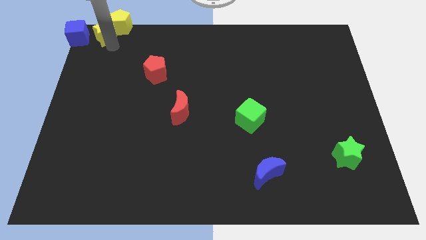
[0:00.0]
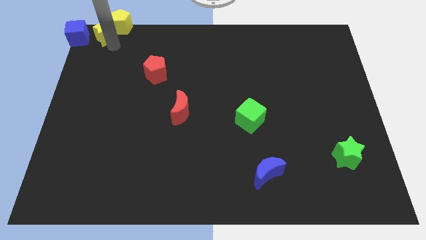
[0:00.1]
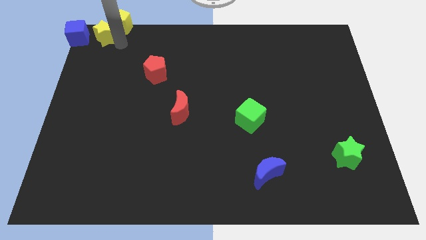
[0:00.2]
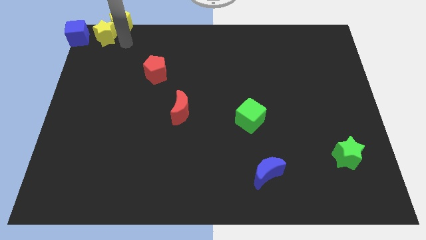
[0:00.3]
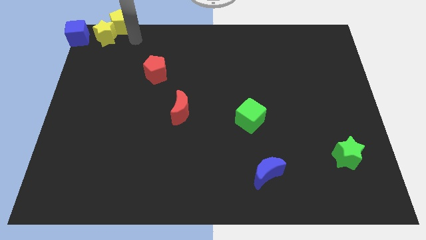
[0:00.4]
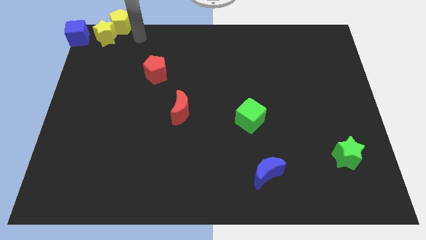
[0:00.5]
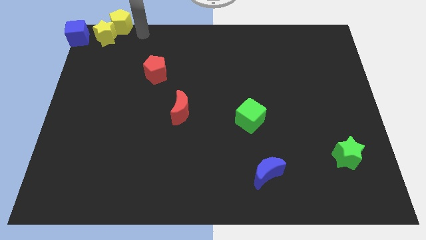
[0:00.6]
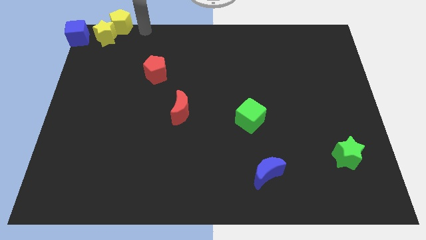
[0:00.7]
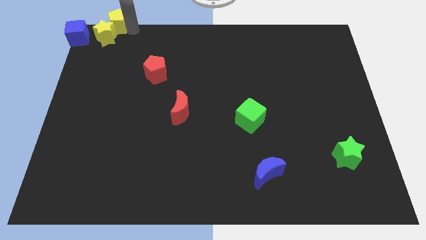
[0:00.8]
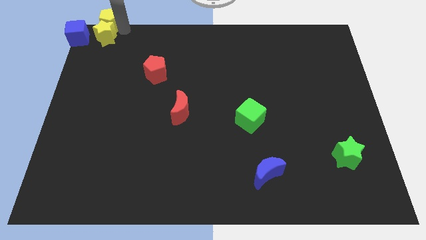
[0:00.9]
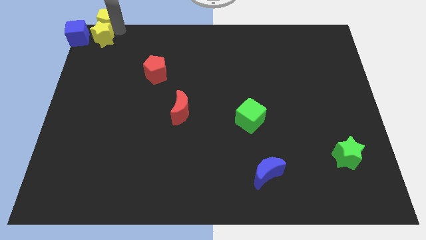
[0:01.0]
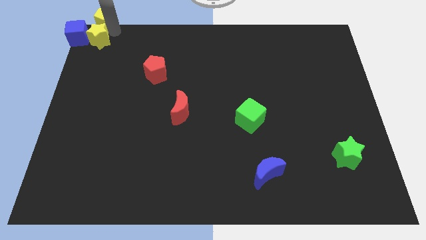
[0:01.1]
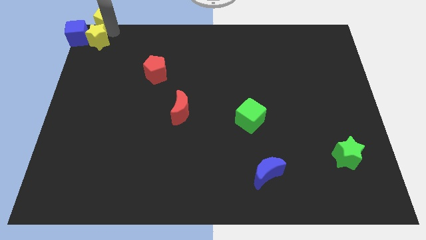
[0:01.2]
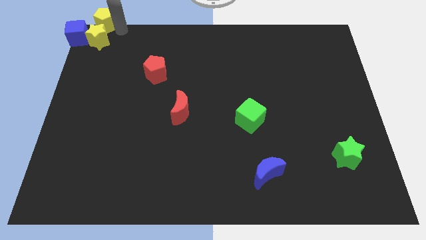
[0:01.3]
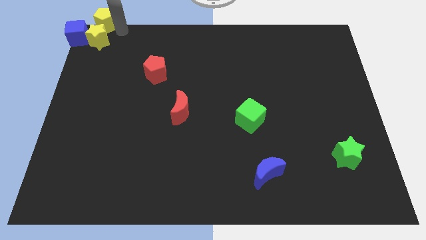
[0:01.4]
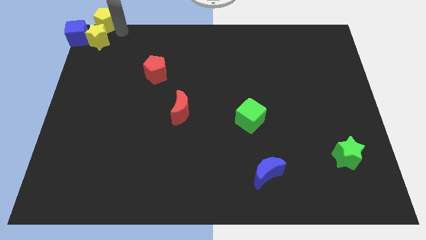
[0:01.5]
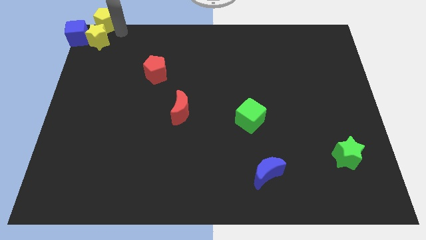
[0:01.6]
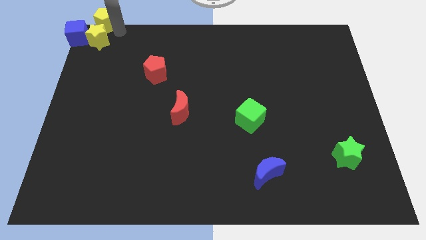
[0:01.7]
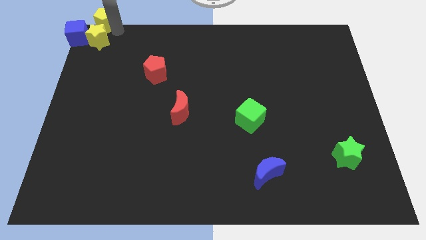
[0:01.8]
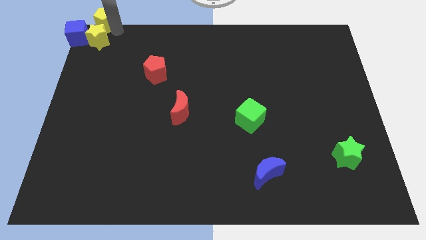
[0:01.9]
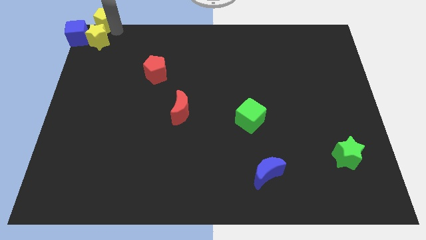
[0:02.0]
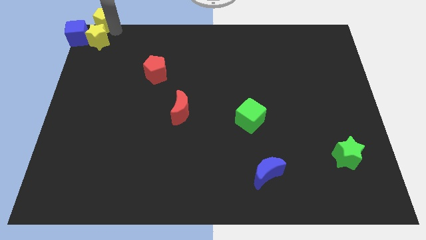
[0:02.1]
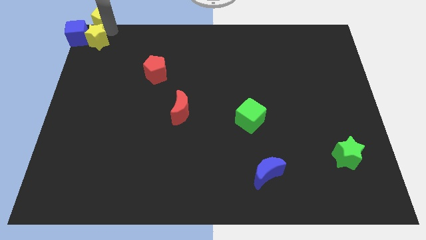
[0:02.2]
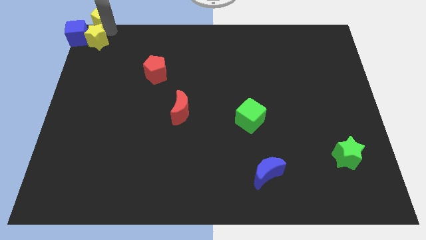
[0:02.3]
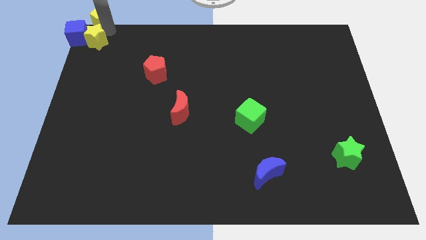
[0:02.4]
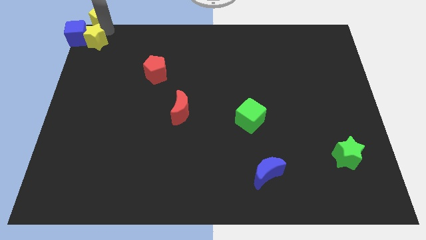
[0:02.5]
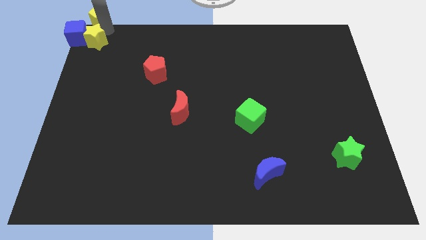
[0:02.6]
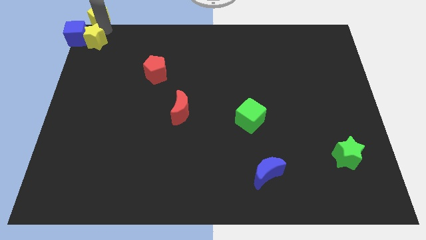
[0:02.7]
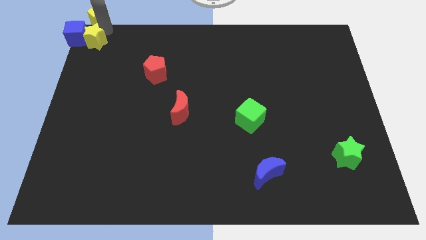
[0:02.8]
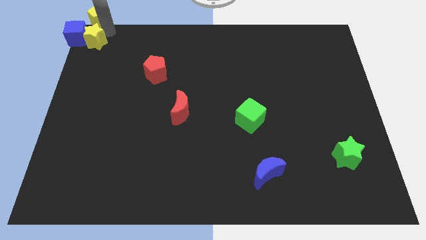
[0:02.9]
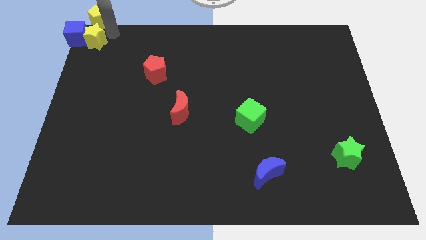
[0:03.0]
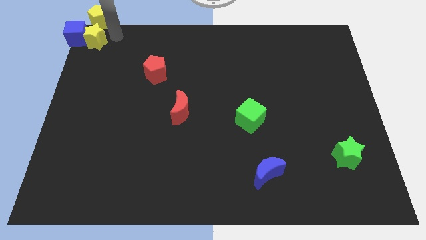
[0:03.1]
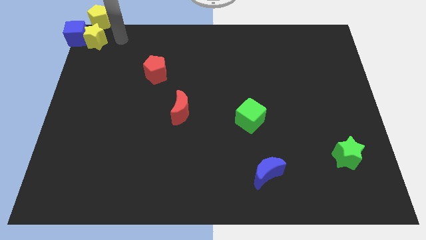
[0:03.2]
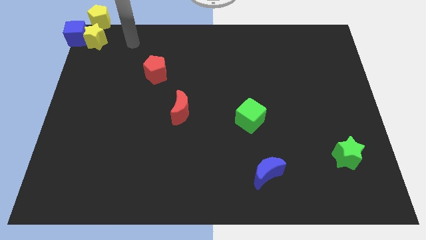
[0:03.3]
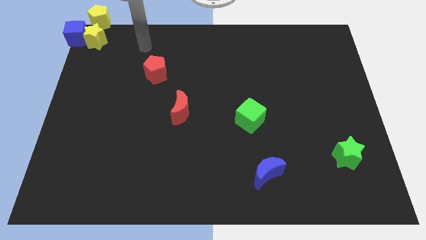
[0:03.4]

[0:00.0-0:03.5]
move yellow star and yellow pentagon towards the blue cube

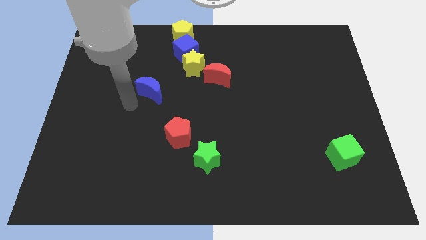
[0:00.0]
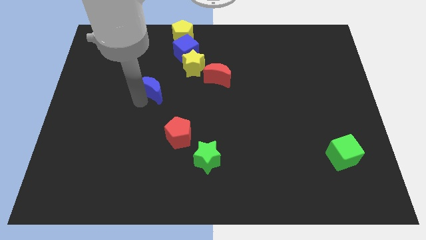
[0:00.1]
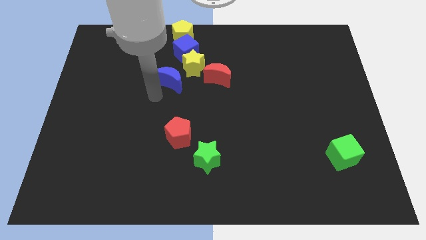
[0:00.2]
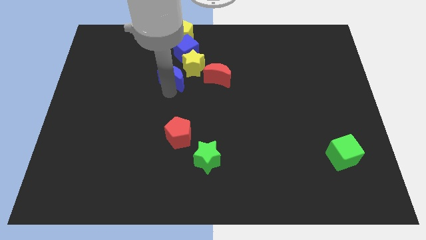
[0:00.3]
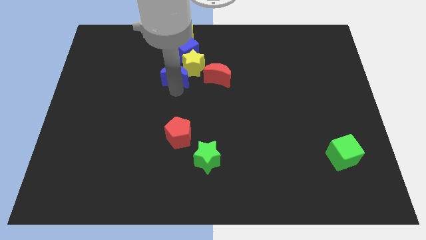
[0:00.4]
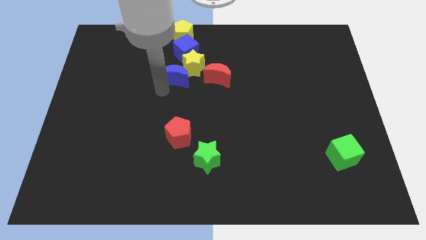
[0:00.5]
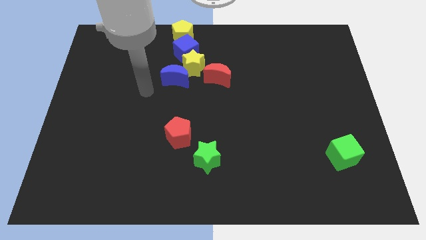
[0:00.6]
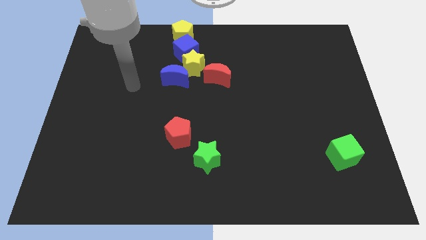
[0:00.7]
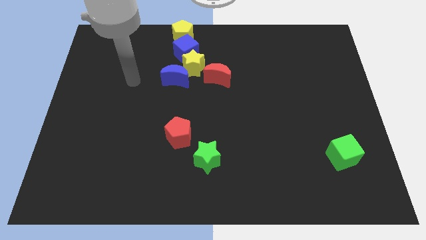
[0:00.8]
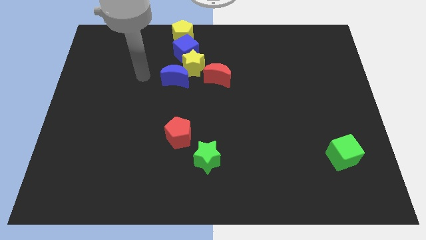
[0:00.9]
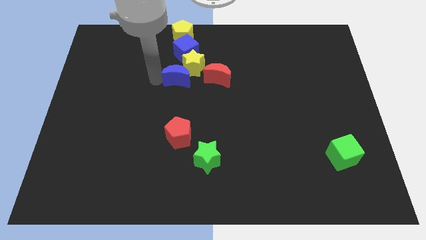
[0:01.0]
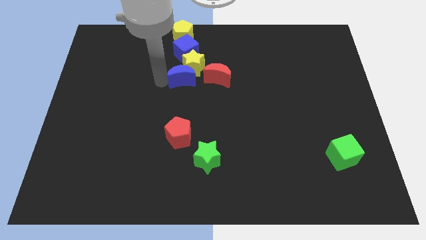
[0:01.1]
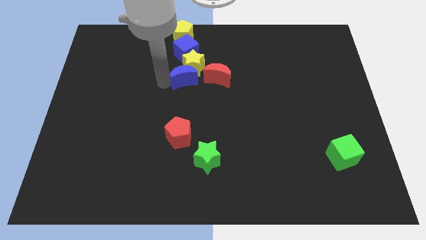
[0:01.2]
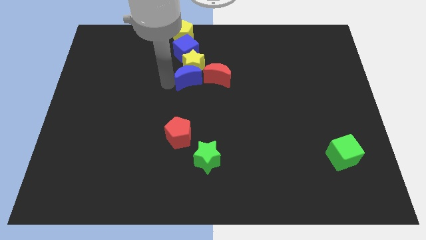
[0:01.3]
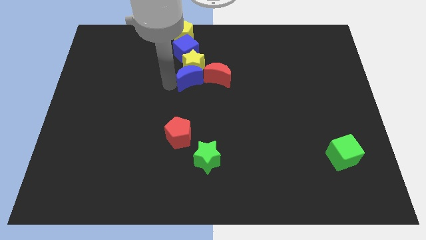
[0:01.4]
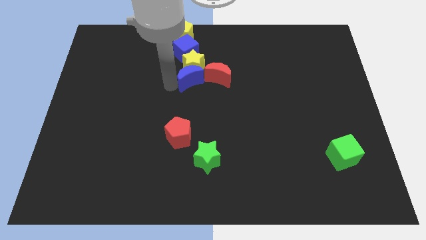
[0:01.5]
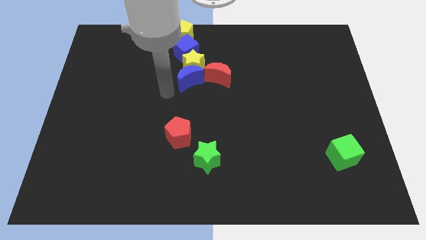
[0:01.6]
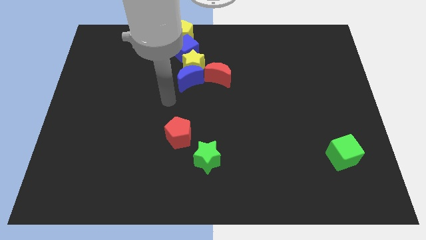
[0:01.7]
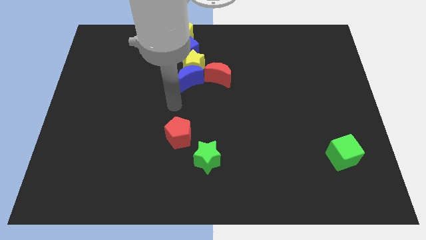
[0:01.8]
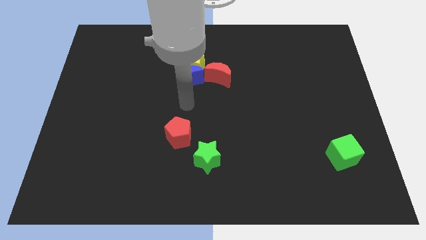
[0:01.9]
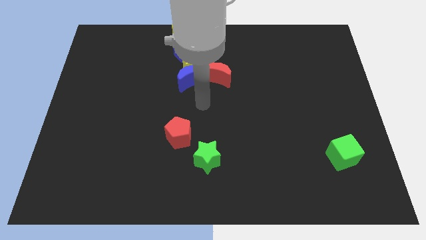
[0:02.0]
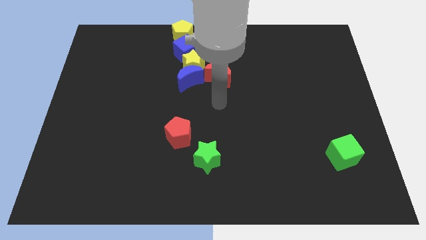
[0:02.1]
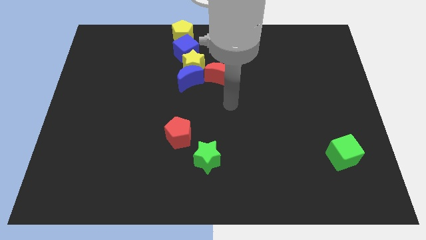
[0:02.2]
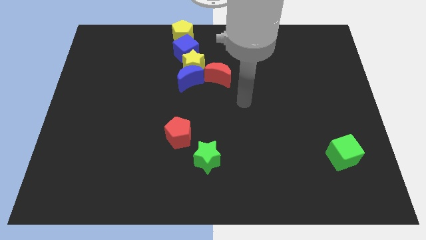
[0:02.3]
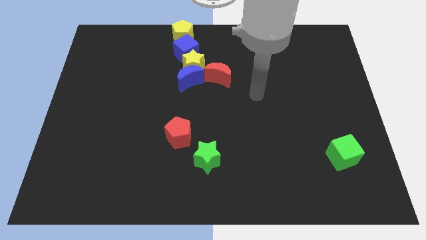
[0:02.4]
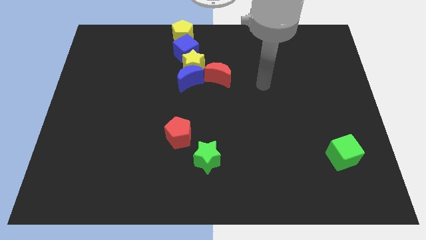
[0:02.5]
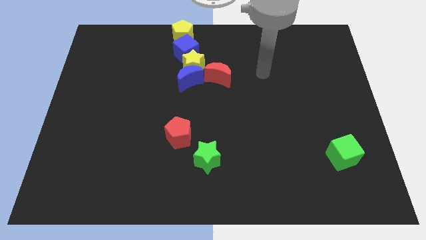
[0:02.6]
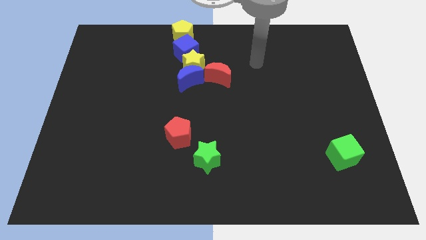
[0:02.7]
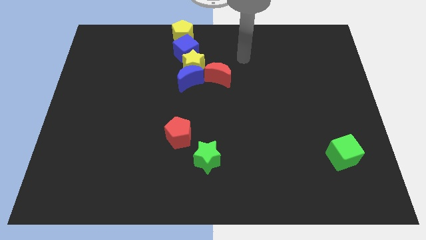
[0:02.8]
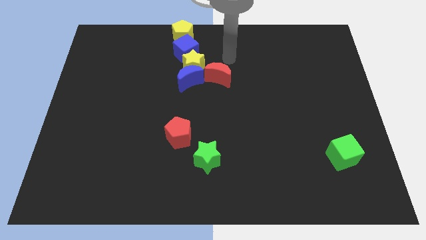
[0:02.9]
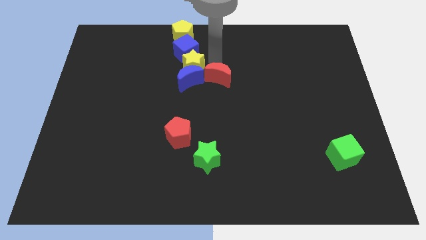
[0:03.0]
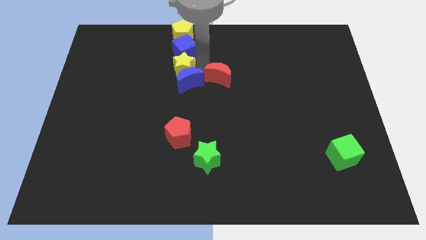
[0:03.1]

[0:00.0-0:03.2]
place blue moon at the bottom of yellow star

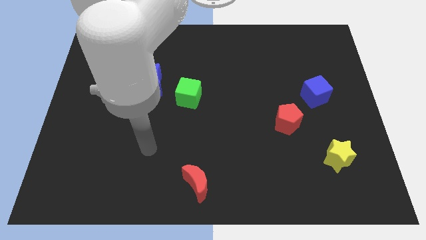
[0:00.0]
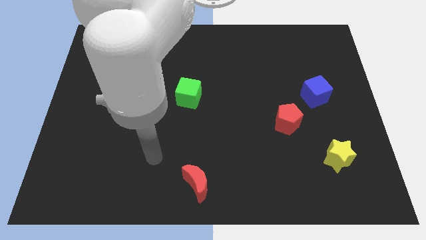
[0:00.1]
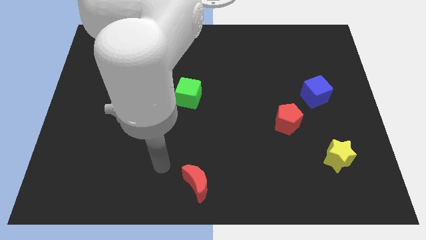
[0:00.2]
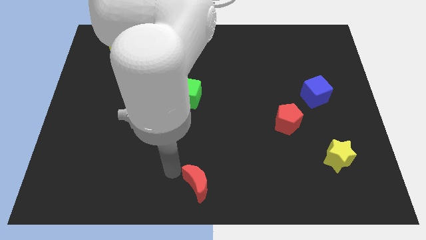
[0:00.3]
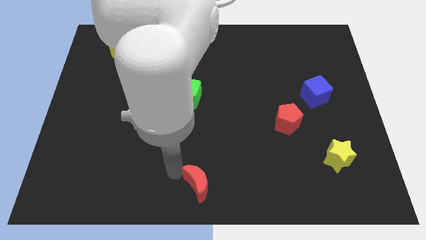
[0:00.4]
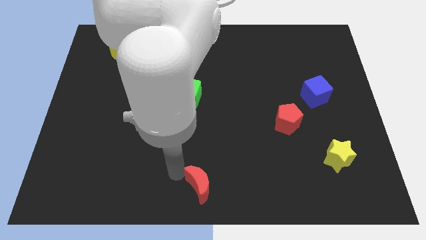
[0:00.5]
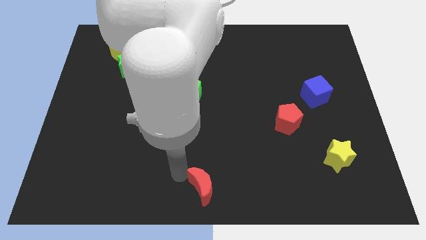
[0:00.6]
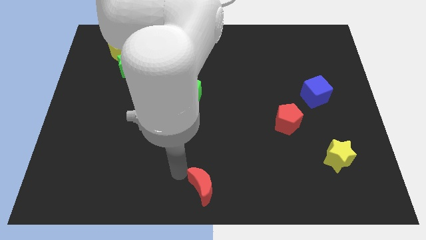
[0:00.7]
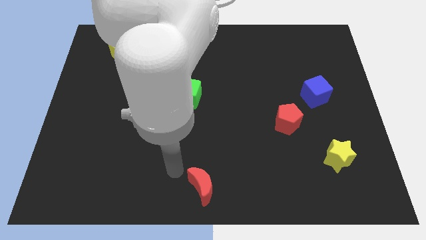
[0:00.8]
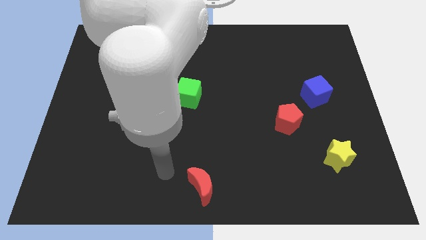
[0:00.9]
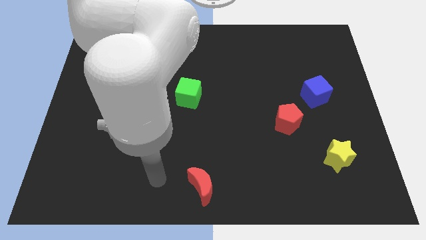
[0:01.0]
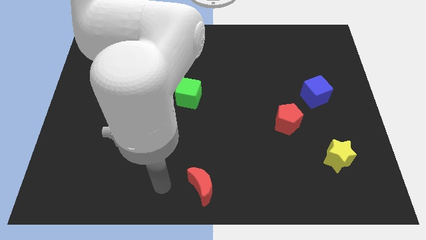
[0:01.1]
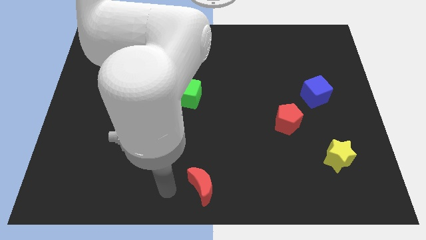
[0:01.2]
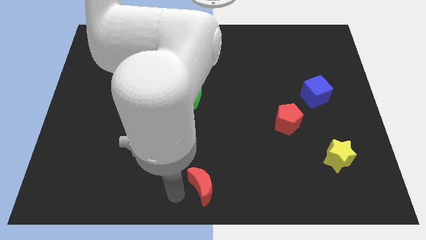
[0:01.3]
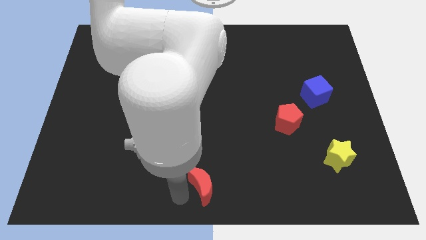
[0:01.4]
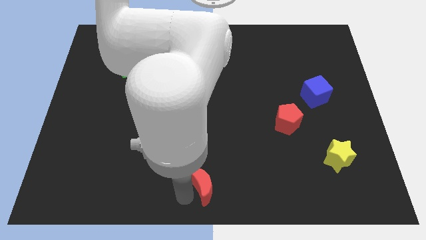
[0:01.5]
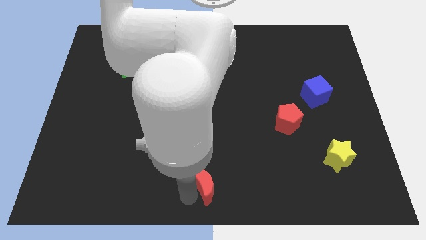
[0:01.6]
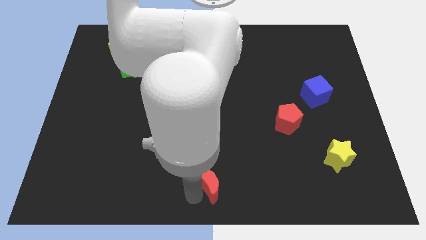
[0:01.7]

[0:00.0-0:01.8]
place the red crescent at the bottom center of the board

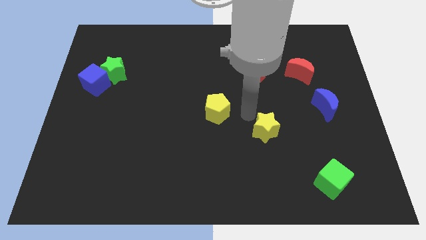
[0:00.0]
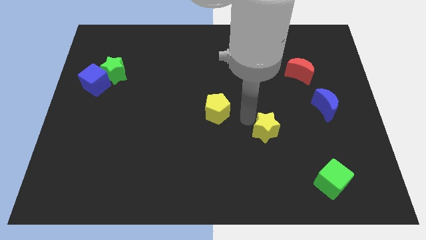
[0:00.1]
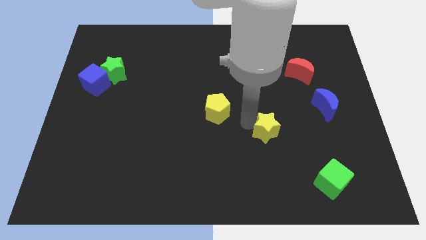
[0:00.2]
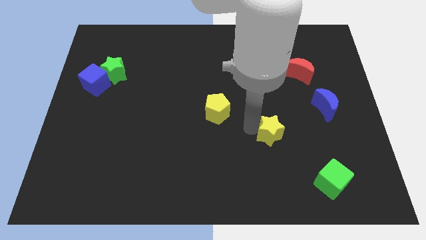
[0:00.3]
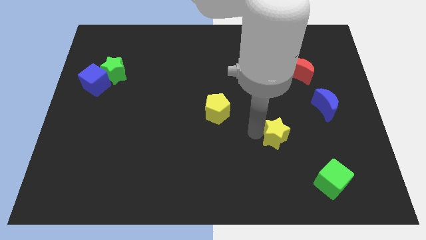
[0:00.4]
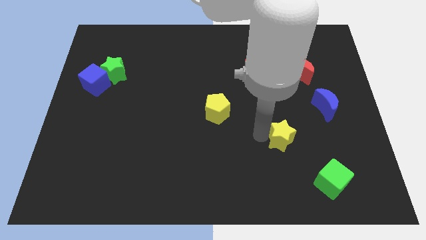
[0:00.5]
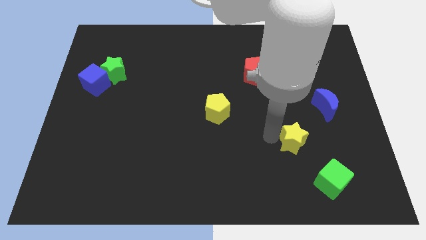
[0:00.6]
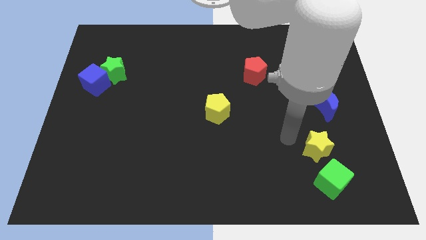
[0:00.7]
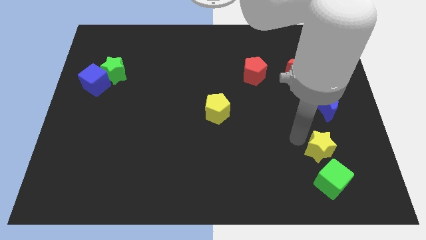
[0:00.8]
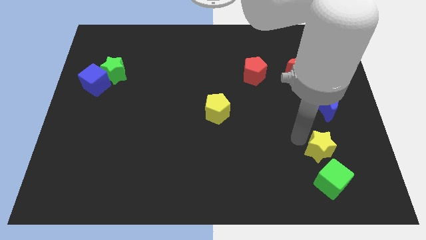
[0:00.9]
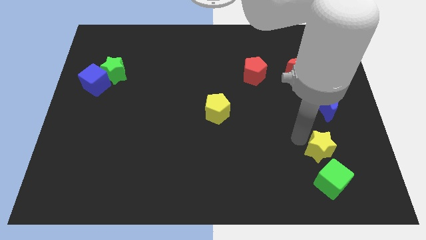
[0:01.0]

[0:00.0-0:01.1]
move yellow star close to green cube
